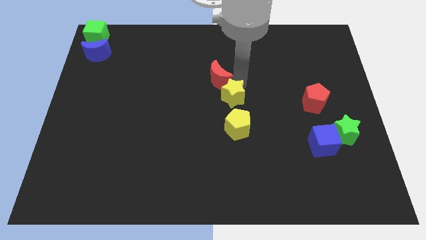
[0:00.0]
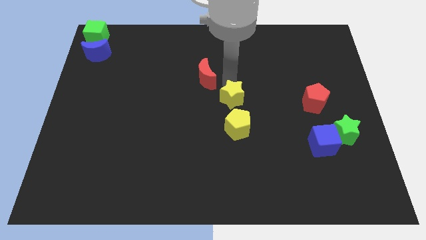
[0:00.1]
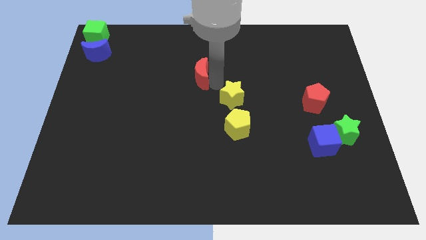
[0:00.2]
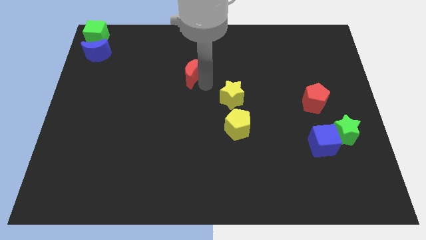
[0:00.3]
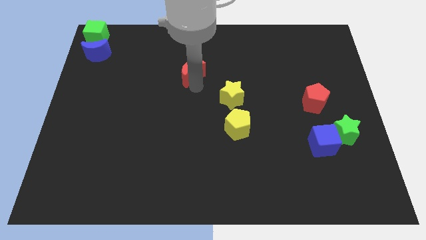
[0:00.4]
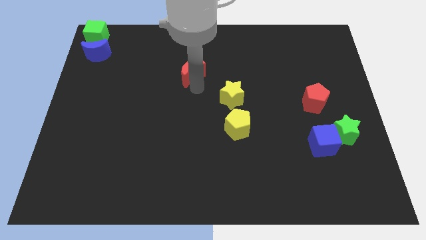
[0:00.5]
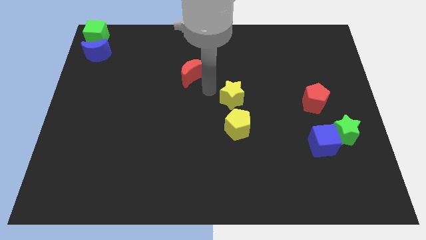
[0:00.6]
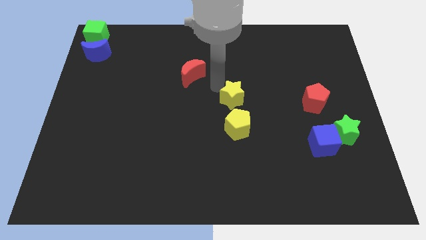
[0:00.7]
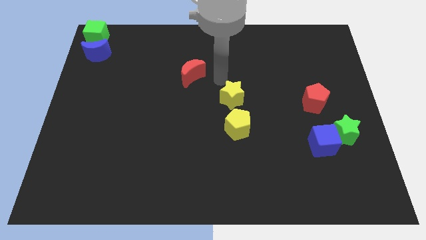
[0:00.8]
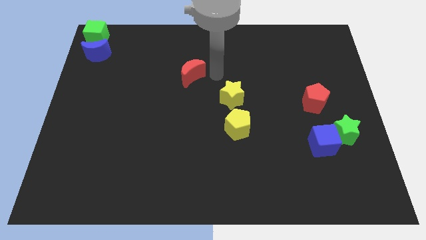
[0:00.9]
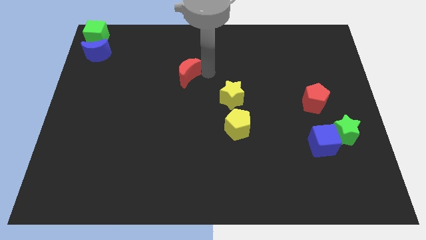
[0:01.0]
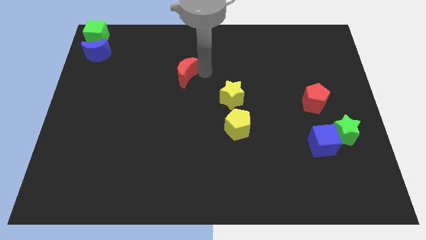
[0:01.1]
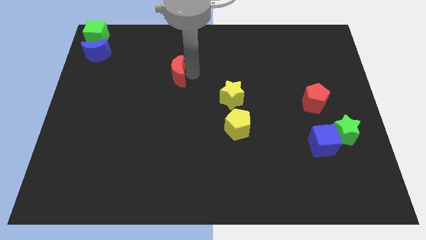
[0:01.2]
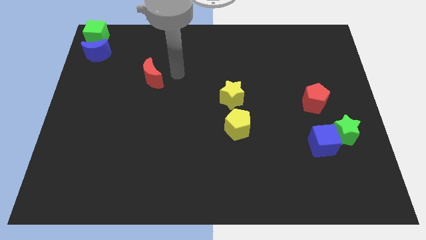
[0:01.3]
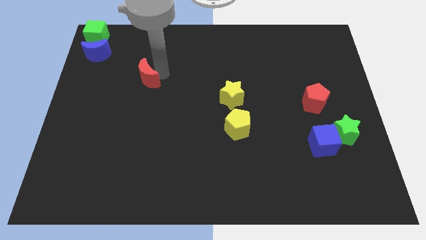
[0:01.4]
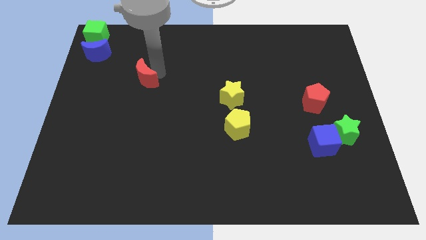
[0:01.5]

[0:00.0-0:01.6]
move the red crescent away from the yellow star

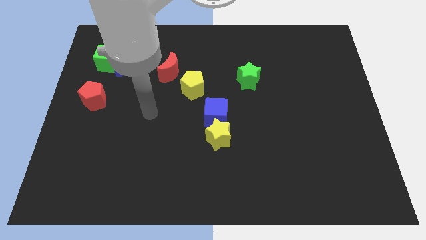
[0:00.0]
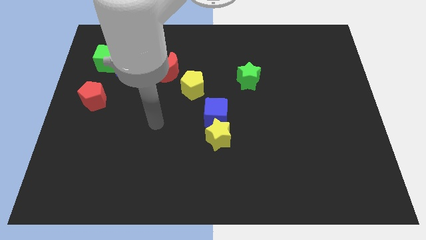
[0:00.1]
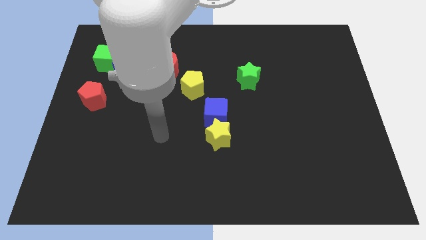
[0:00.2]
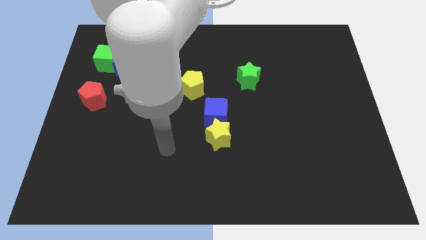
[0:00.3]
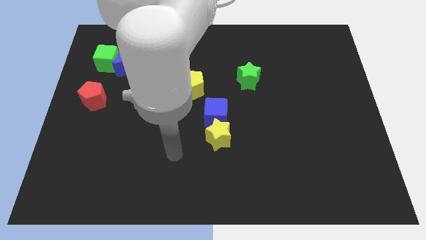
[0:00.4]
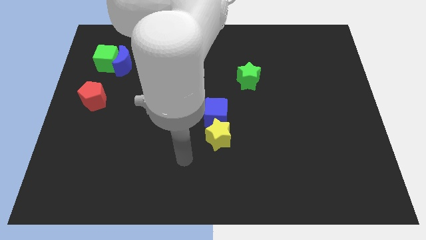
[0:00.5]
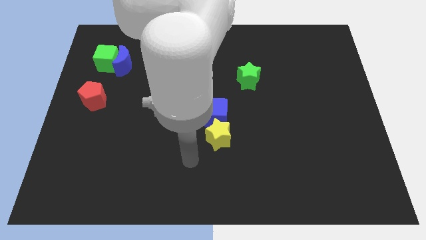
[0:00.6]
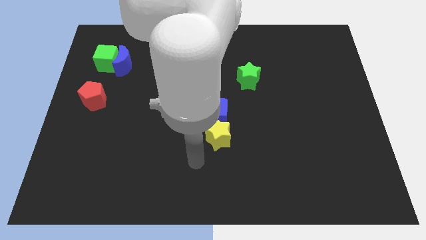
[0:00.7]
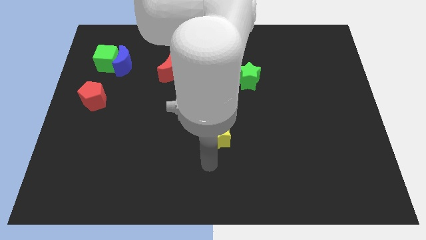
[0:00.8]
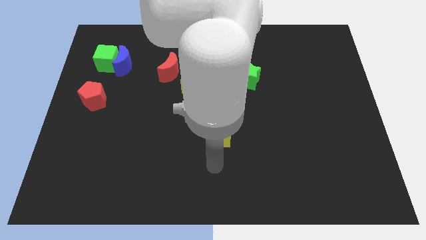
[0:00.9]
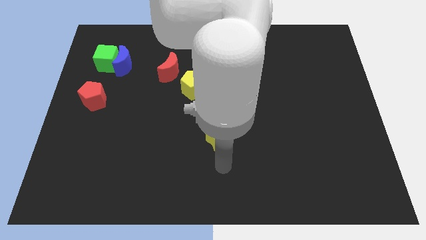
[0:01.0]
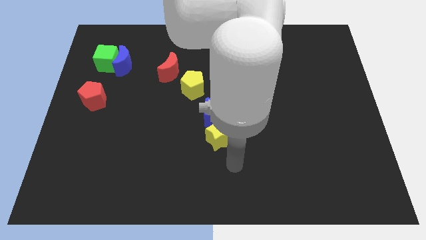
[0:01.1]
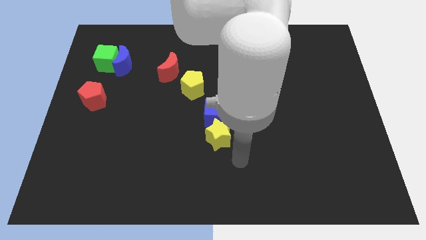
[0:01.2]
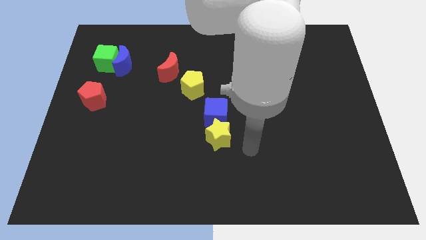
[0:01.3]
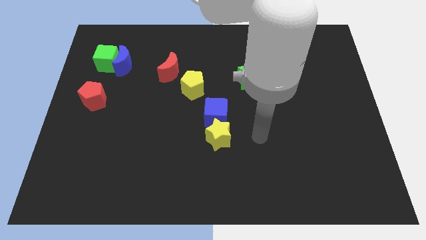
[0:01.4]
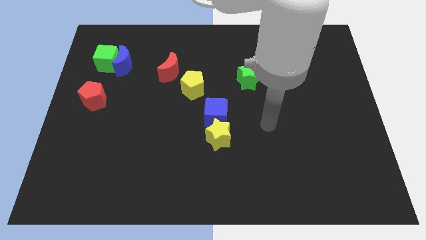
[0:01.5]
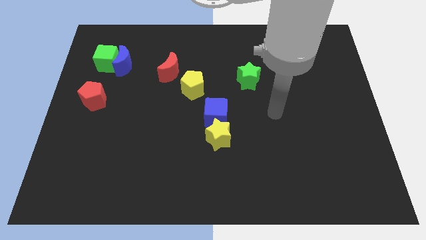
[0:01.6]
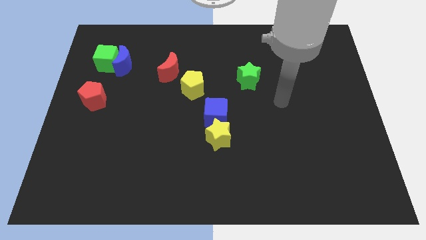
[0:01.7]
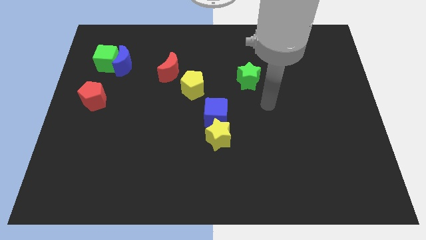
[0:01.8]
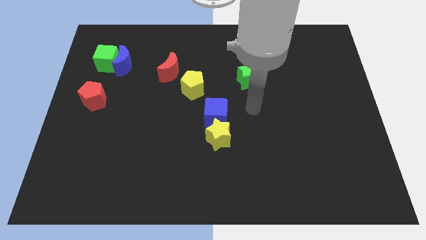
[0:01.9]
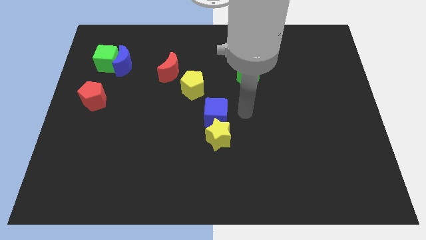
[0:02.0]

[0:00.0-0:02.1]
move the arm towards the right of the blue cube

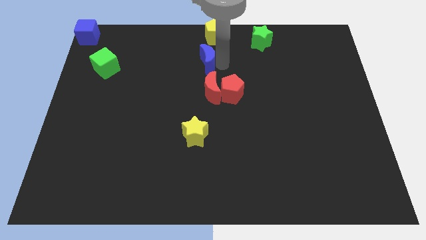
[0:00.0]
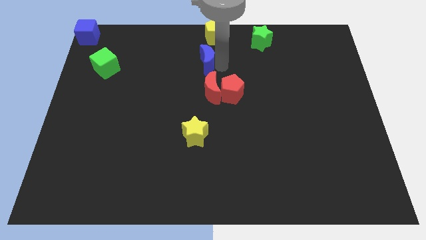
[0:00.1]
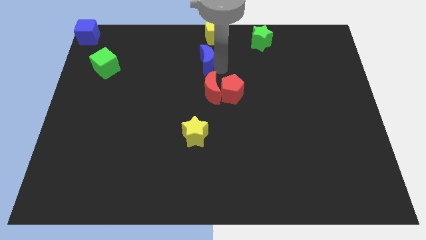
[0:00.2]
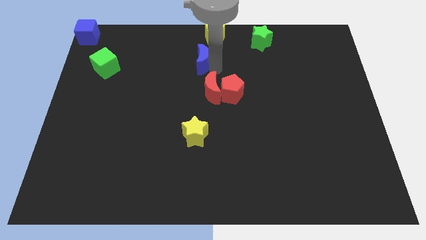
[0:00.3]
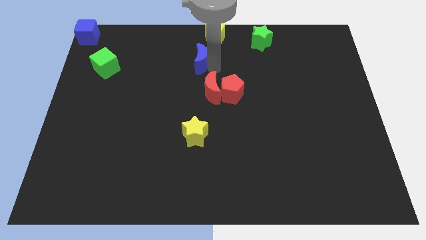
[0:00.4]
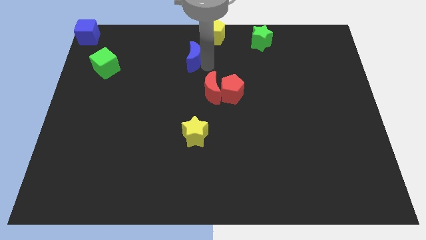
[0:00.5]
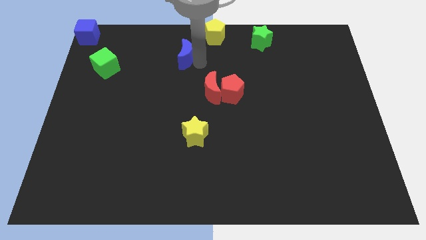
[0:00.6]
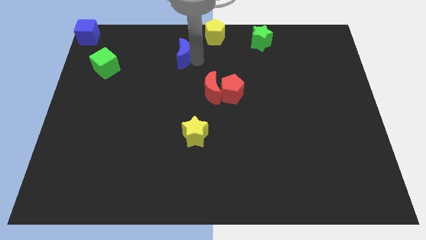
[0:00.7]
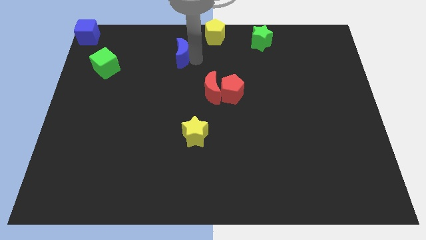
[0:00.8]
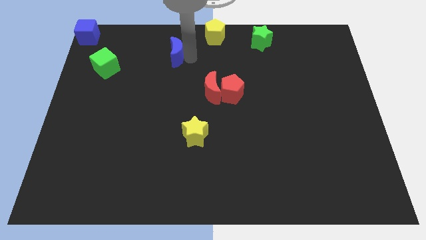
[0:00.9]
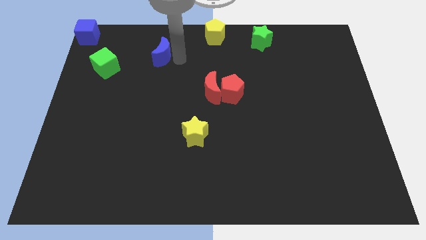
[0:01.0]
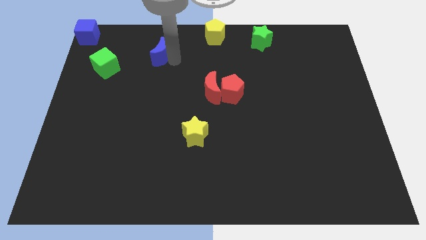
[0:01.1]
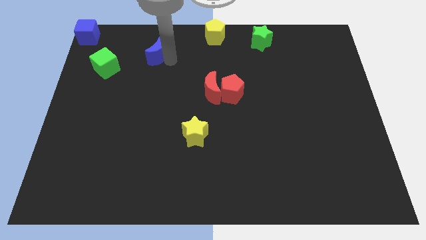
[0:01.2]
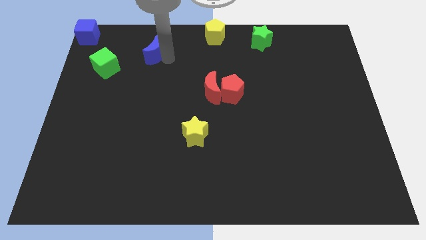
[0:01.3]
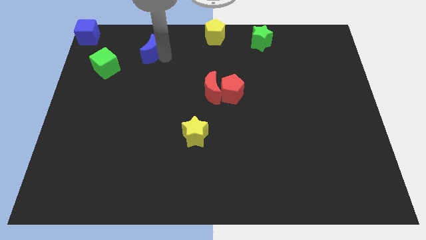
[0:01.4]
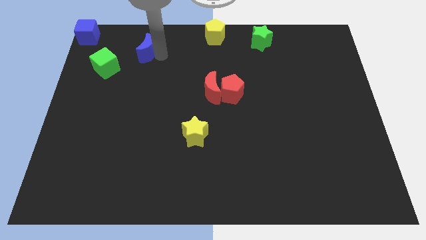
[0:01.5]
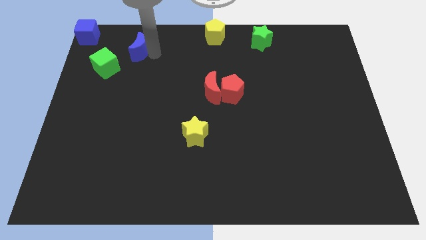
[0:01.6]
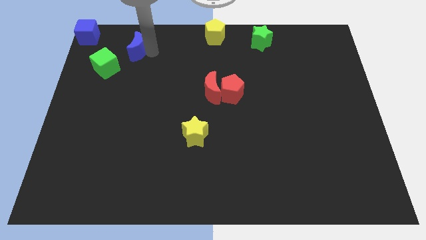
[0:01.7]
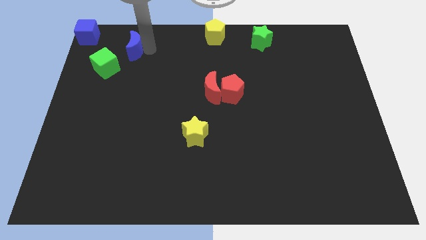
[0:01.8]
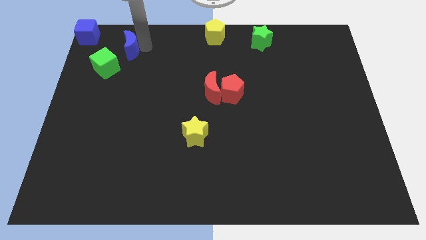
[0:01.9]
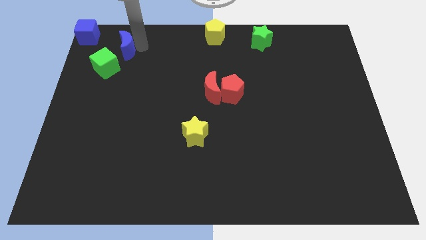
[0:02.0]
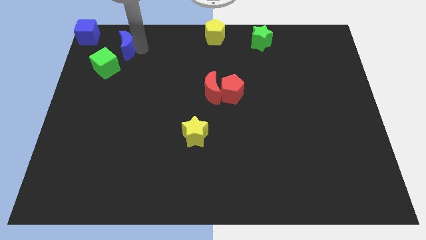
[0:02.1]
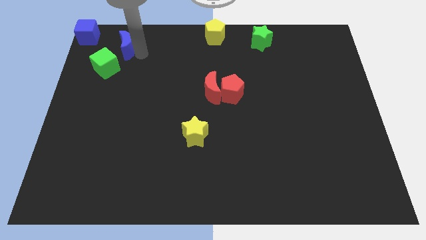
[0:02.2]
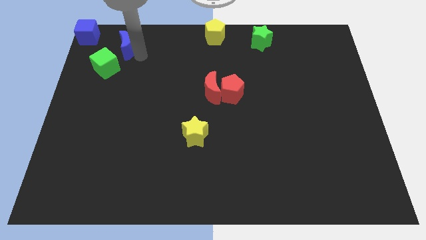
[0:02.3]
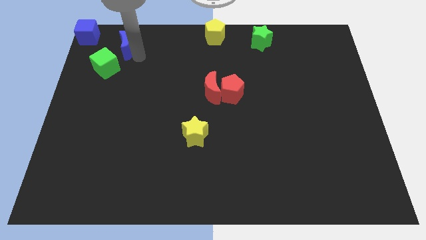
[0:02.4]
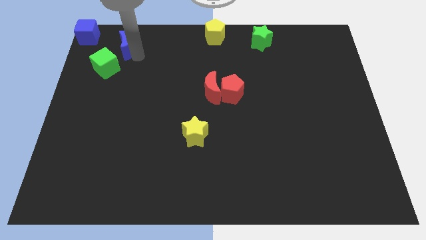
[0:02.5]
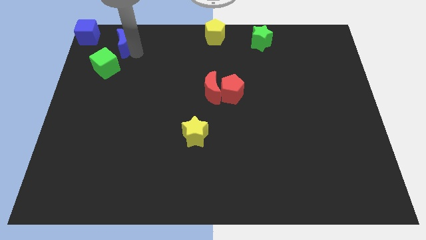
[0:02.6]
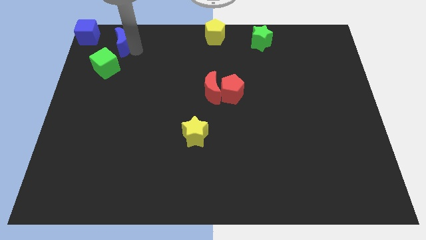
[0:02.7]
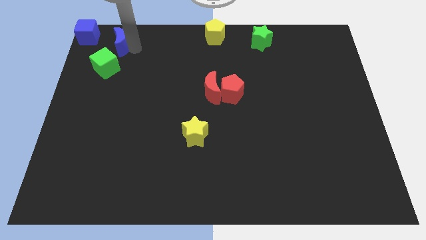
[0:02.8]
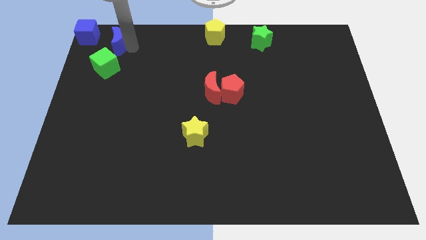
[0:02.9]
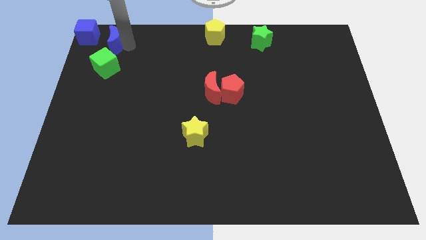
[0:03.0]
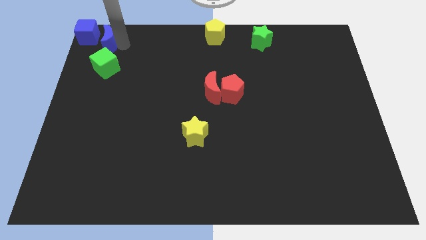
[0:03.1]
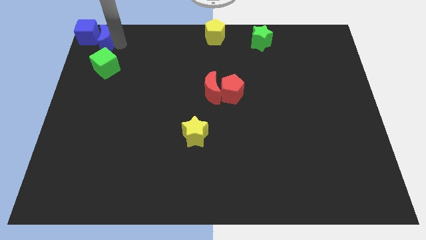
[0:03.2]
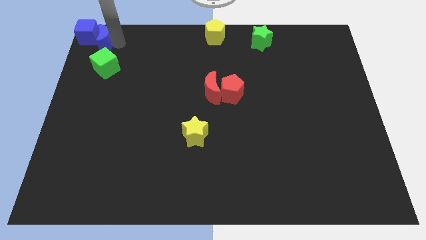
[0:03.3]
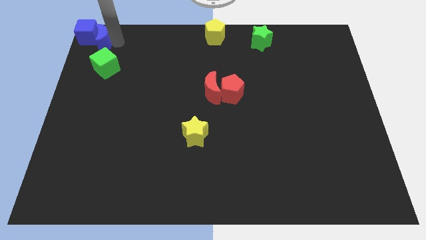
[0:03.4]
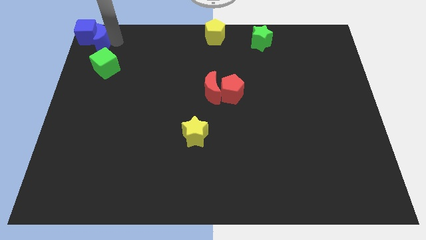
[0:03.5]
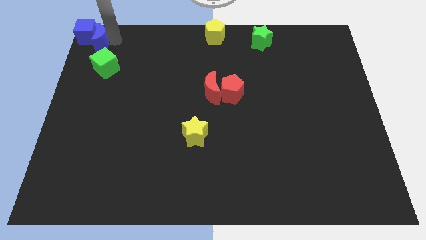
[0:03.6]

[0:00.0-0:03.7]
move the blue crescent closer to the blue cube

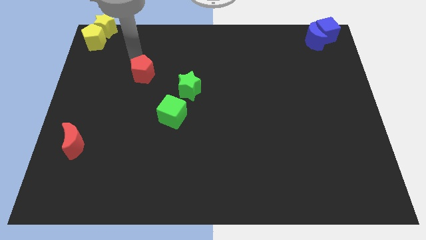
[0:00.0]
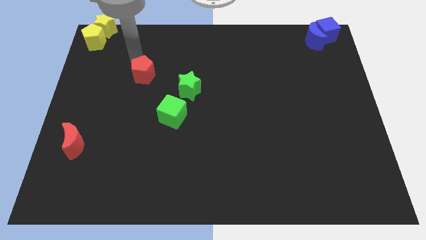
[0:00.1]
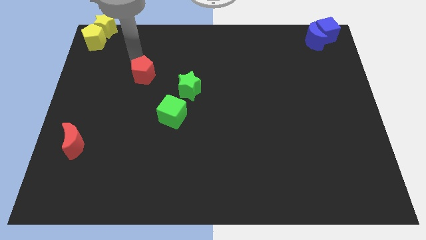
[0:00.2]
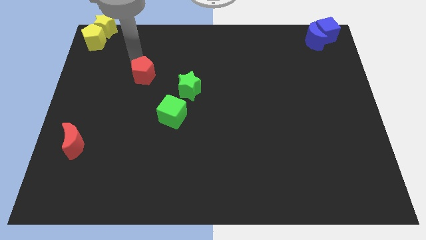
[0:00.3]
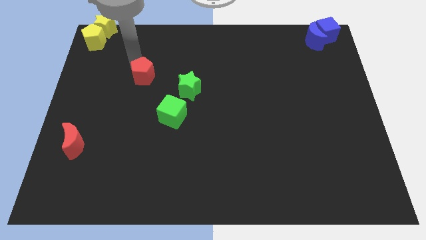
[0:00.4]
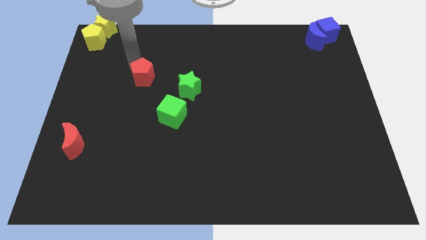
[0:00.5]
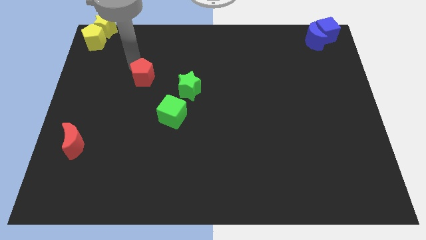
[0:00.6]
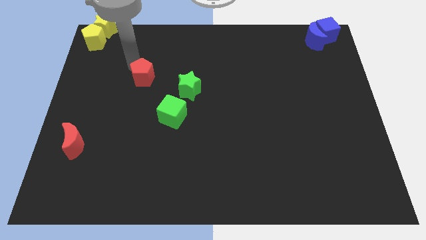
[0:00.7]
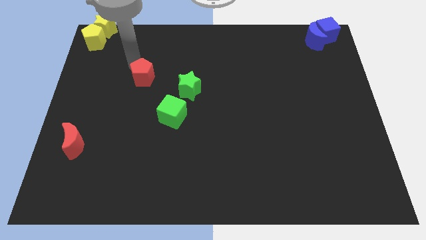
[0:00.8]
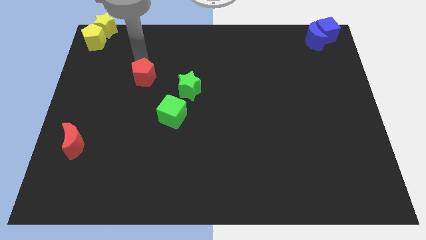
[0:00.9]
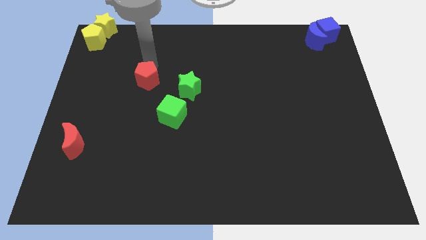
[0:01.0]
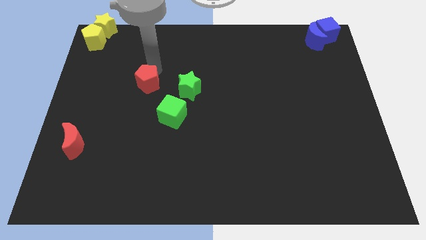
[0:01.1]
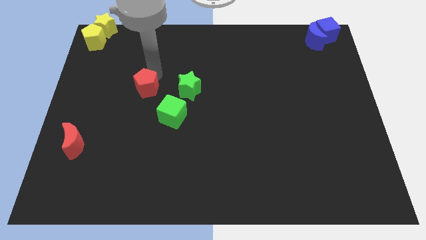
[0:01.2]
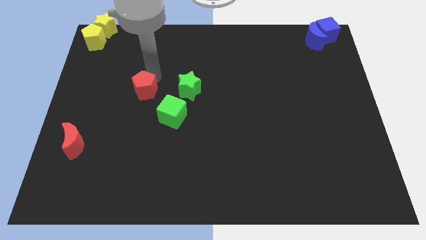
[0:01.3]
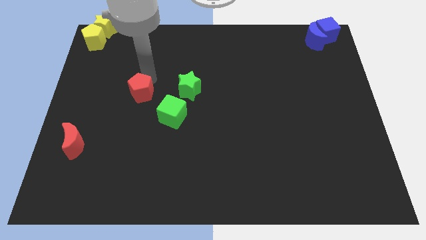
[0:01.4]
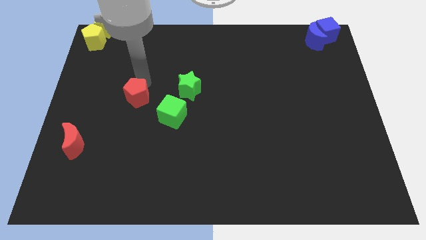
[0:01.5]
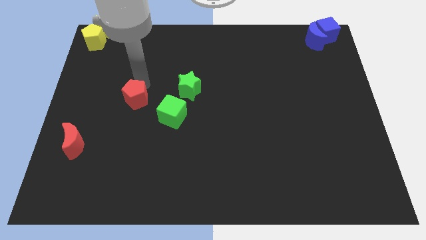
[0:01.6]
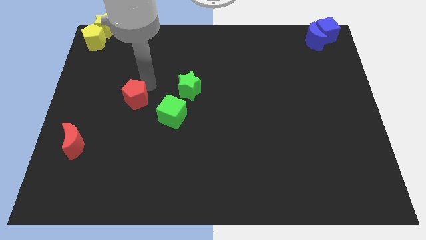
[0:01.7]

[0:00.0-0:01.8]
move the red pentagon towards down
